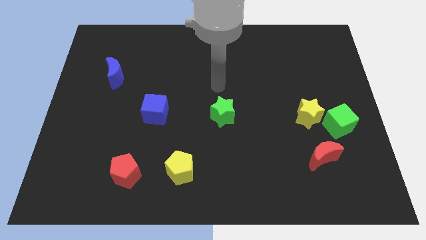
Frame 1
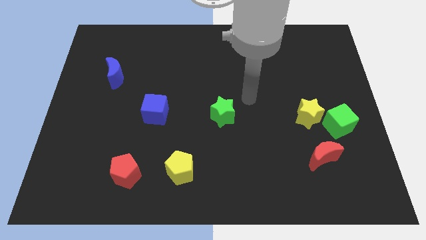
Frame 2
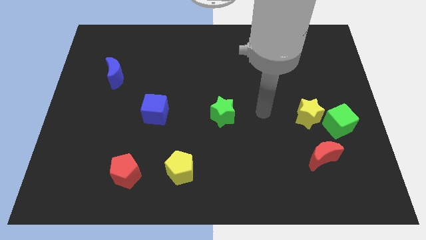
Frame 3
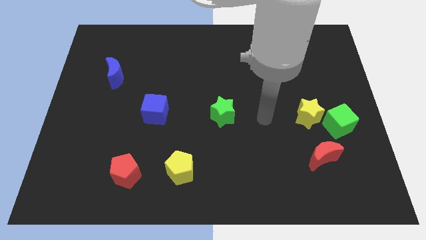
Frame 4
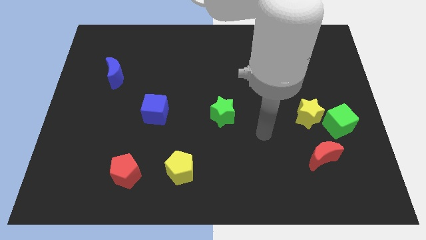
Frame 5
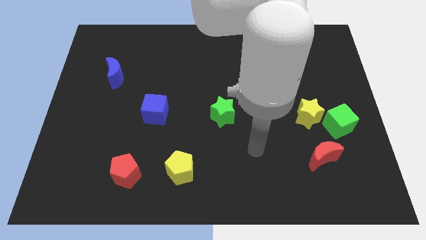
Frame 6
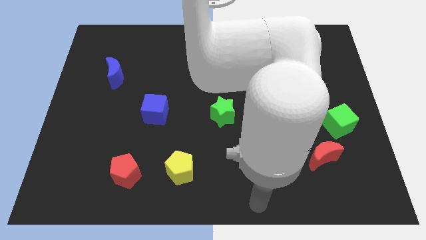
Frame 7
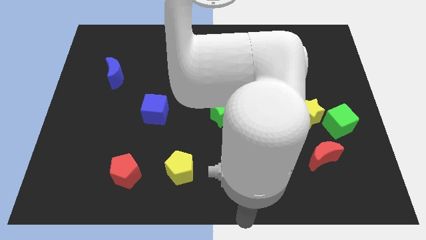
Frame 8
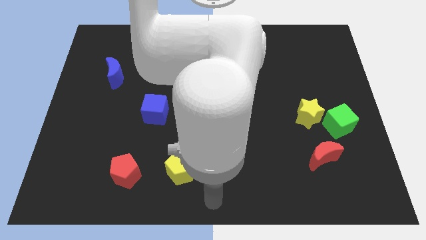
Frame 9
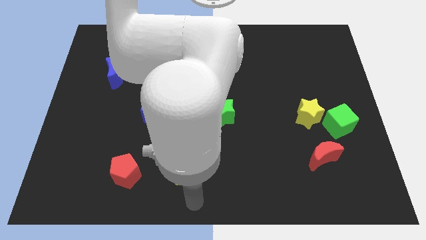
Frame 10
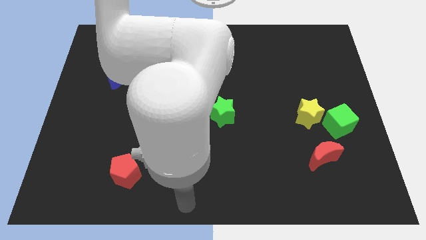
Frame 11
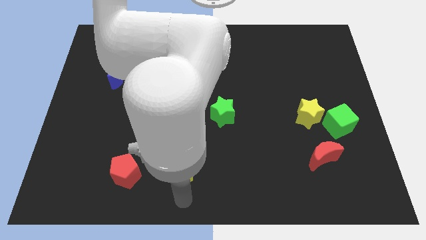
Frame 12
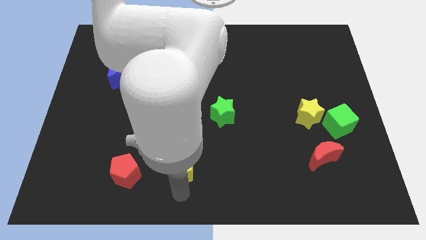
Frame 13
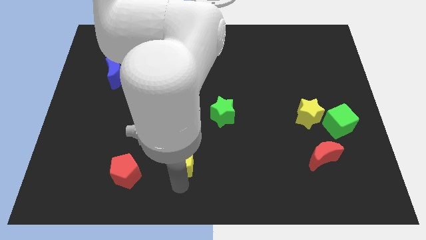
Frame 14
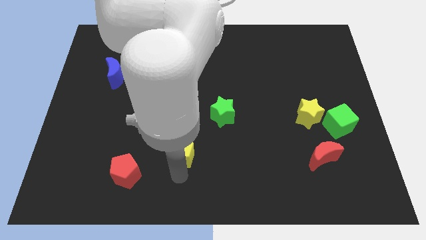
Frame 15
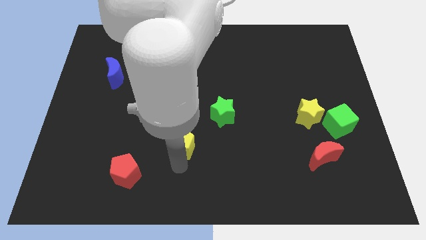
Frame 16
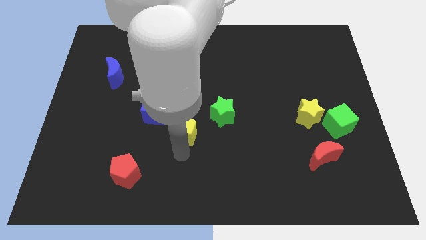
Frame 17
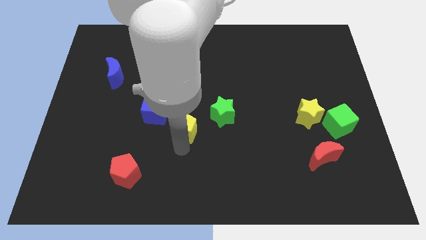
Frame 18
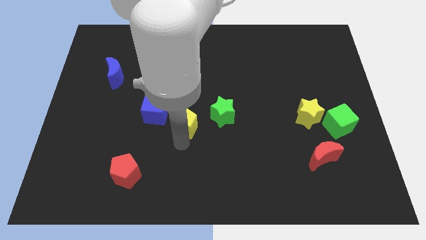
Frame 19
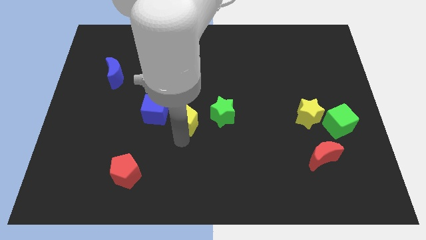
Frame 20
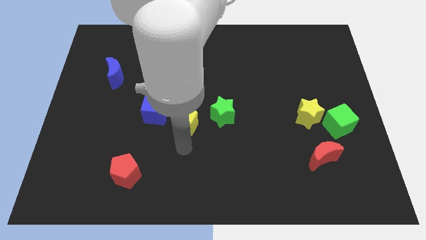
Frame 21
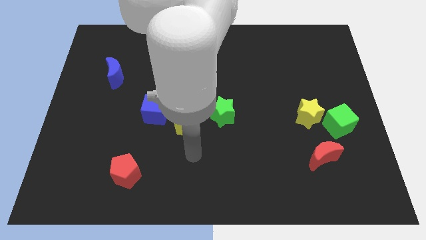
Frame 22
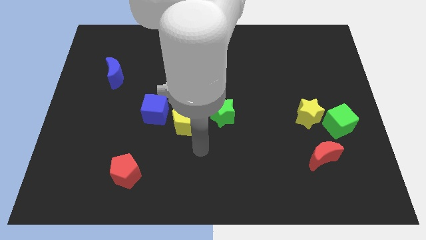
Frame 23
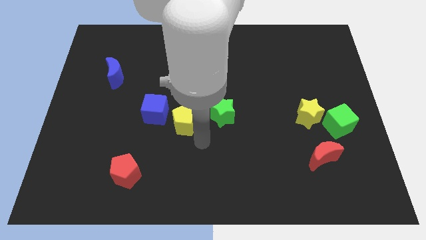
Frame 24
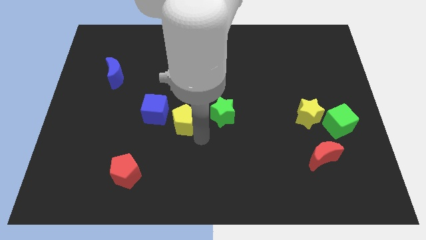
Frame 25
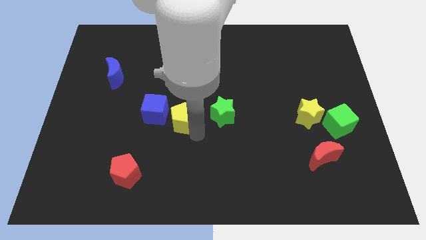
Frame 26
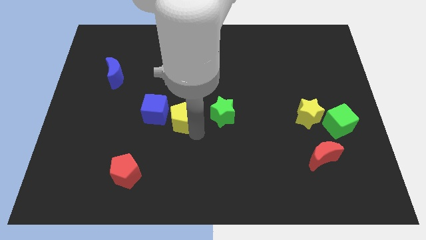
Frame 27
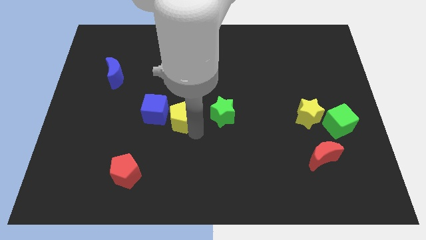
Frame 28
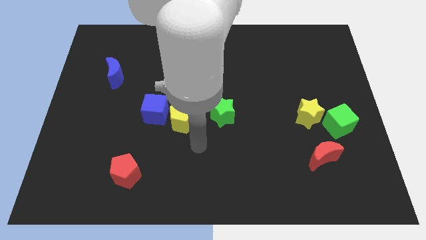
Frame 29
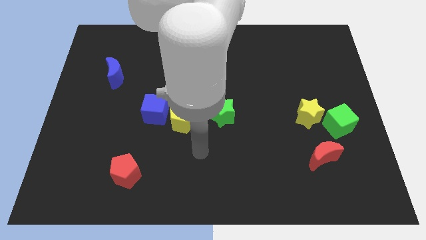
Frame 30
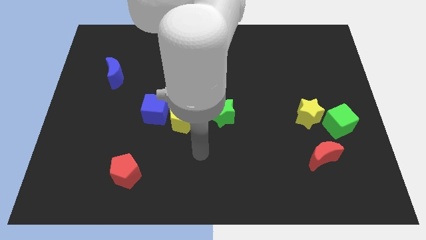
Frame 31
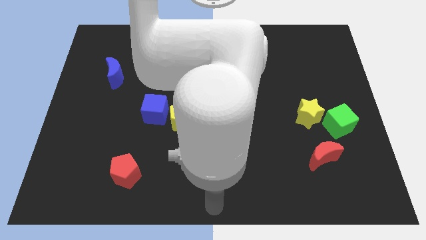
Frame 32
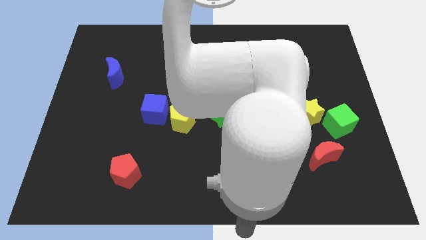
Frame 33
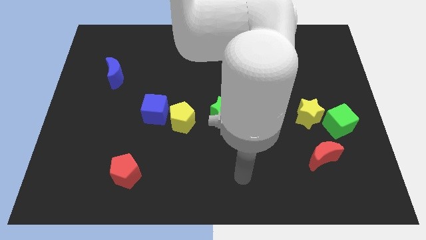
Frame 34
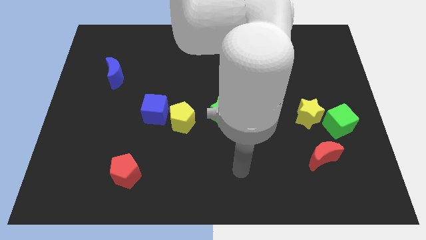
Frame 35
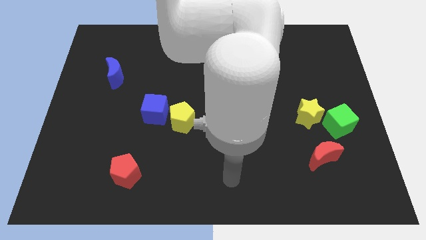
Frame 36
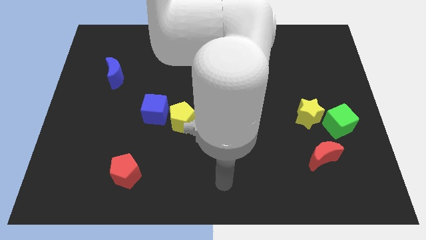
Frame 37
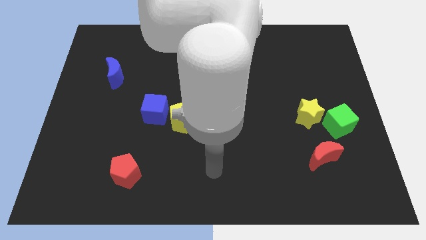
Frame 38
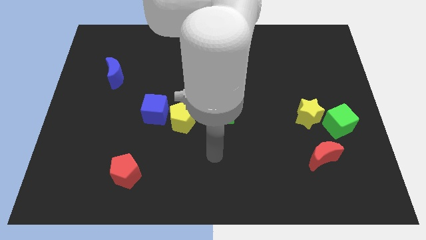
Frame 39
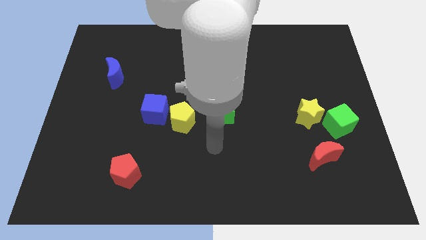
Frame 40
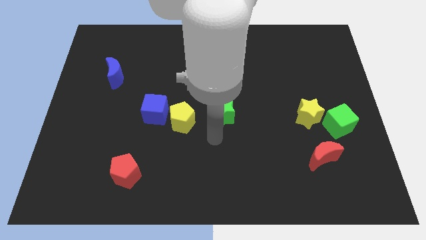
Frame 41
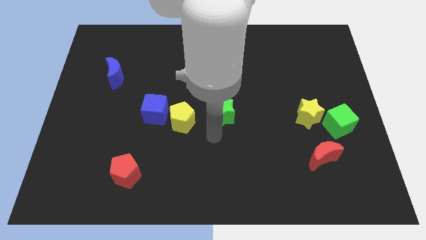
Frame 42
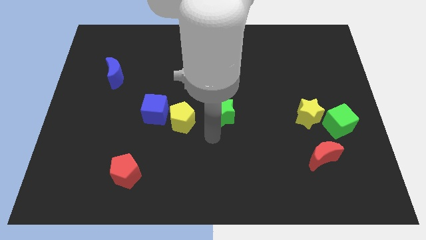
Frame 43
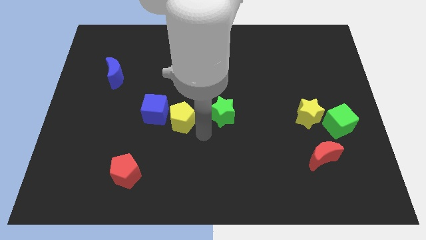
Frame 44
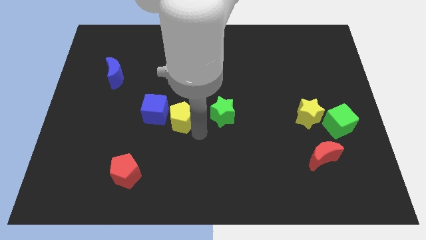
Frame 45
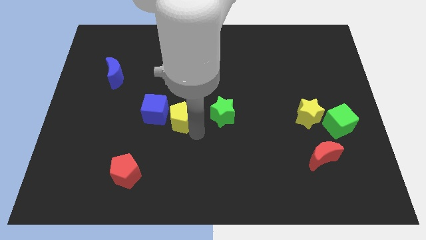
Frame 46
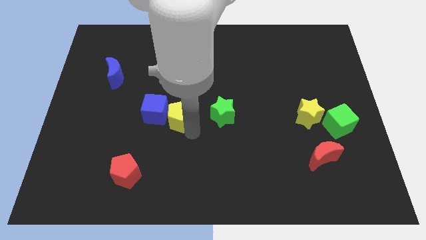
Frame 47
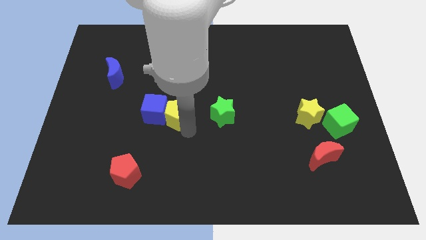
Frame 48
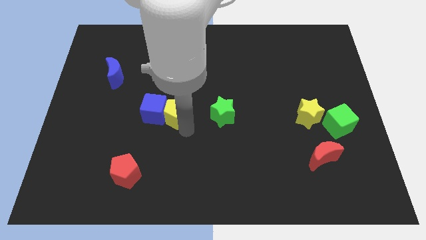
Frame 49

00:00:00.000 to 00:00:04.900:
move the yellow pentagon close to the blue cube

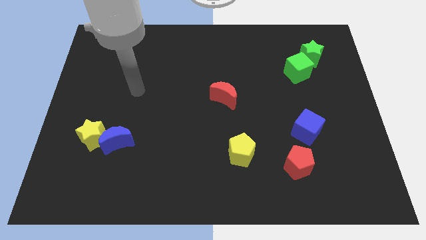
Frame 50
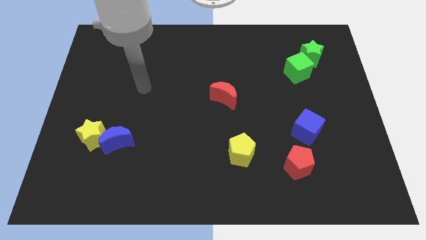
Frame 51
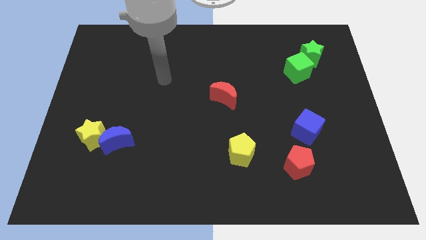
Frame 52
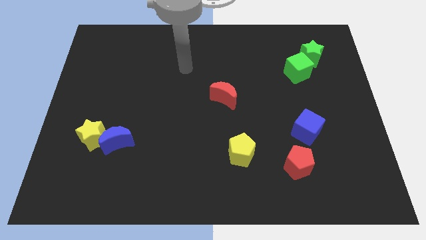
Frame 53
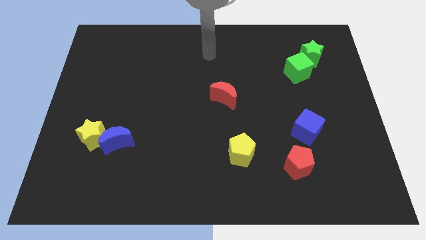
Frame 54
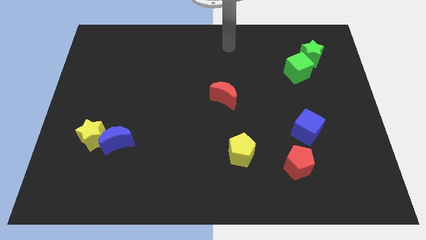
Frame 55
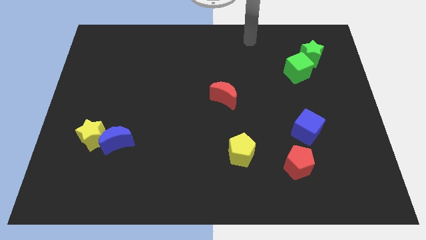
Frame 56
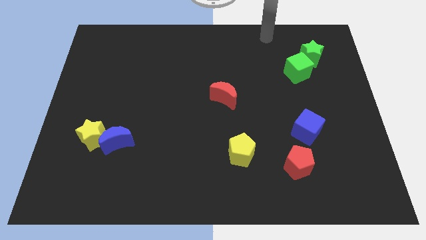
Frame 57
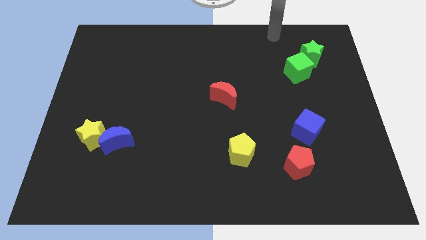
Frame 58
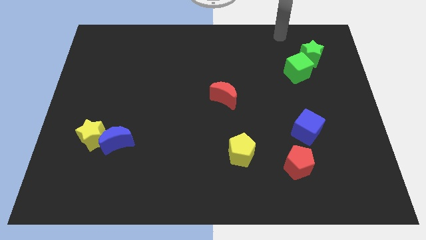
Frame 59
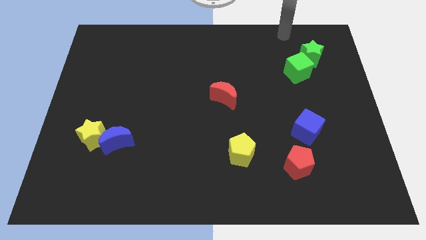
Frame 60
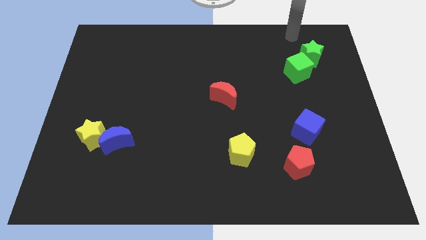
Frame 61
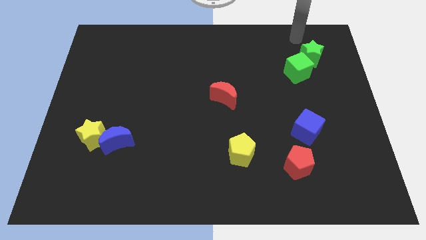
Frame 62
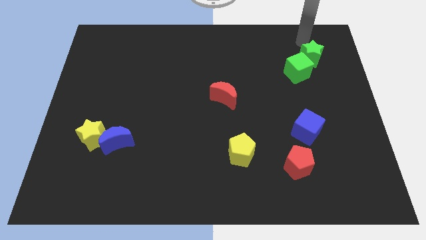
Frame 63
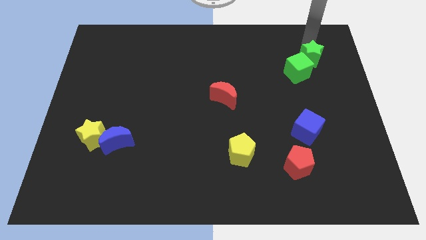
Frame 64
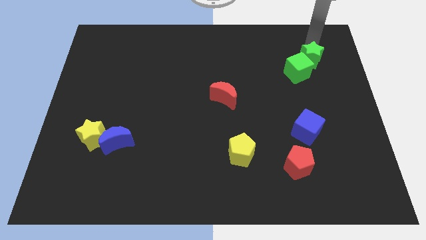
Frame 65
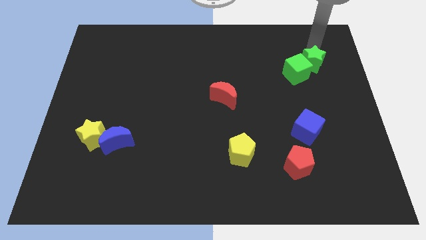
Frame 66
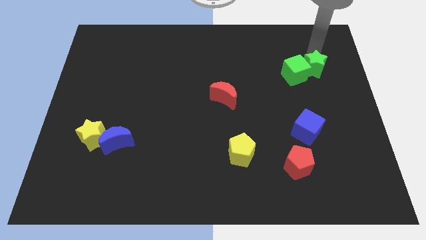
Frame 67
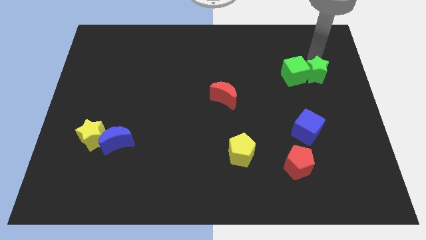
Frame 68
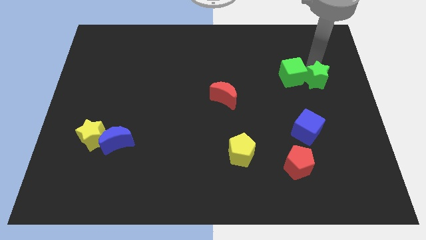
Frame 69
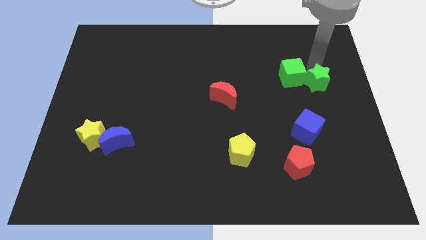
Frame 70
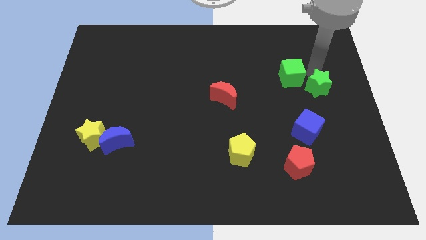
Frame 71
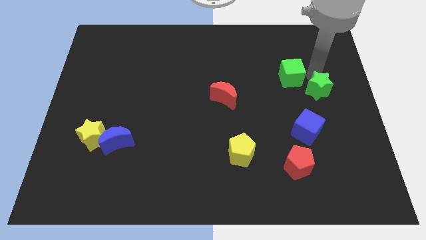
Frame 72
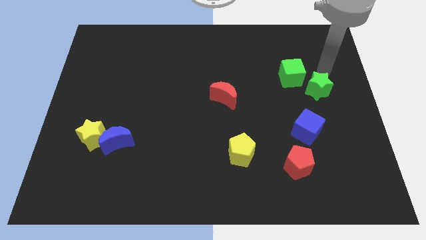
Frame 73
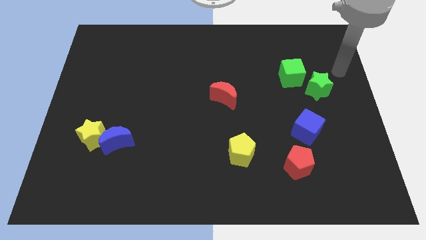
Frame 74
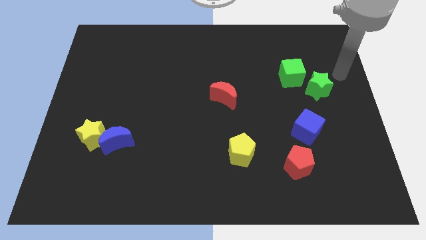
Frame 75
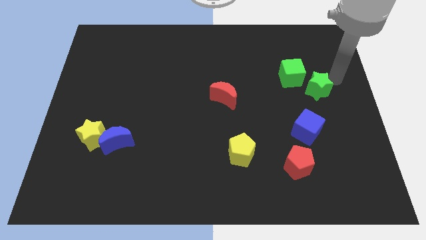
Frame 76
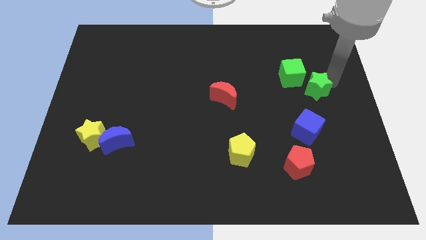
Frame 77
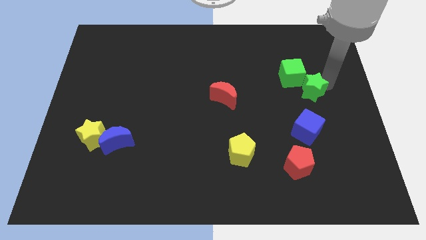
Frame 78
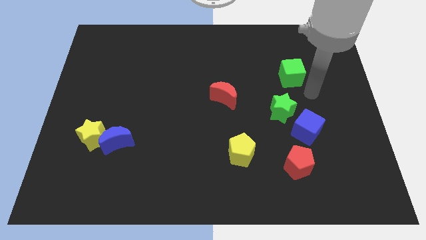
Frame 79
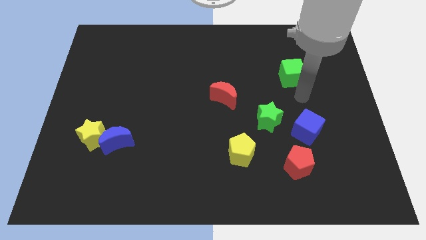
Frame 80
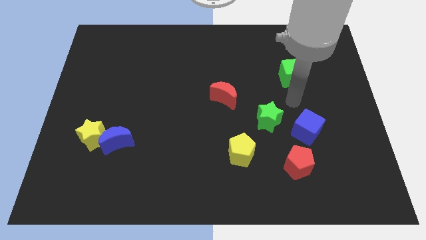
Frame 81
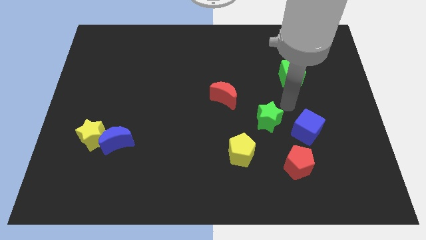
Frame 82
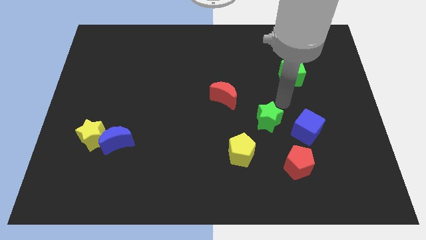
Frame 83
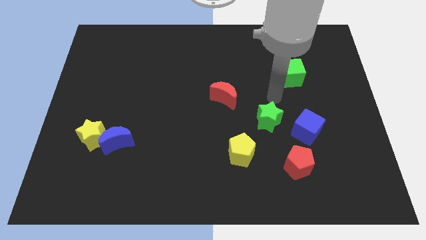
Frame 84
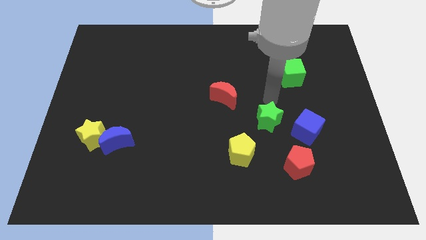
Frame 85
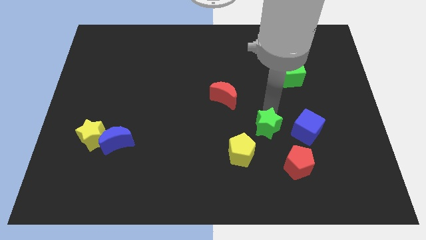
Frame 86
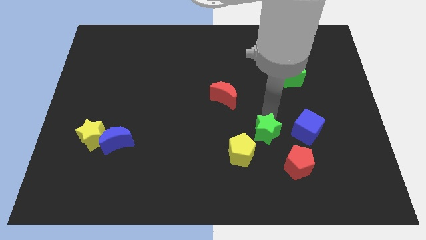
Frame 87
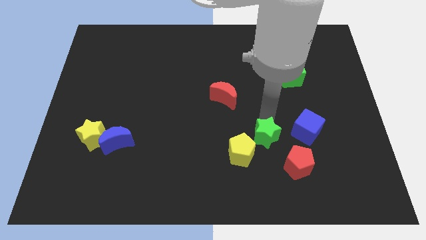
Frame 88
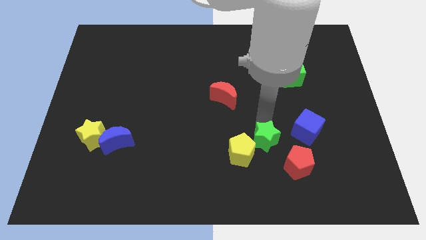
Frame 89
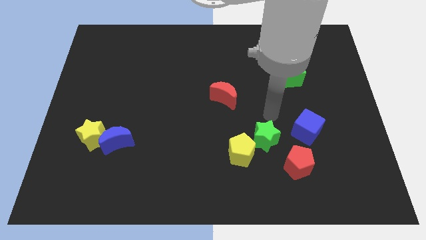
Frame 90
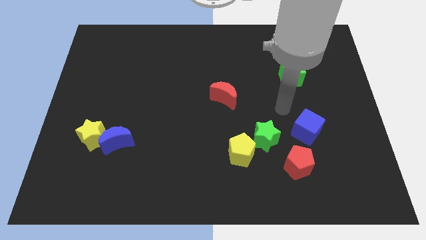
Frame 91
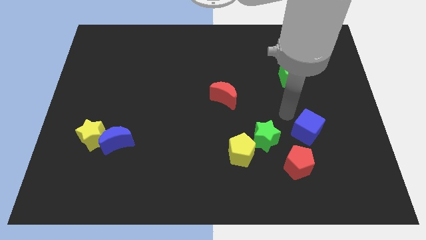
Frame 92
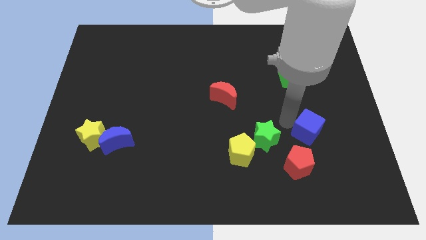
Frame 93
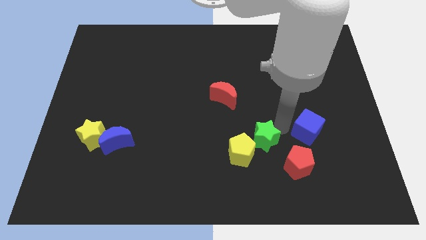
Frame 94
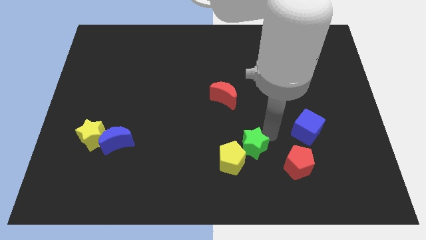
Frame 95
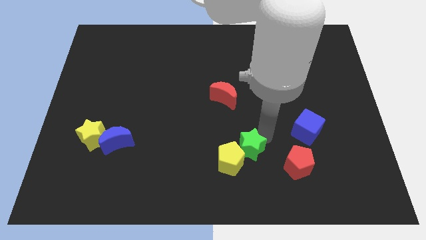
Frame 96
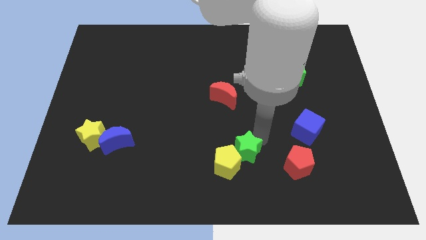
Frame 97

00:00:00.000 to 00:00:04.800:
slide the green star close to the yellow pentagon
